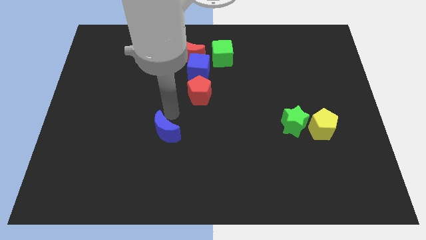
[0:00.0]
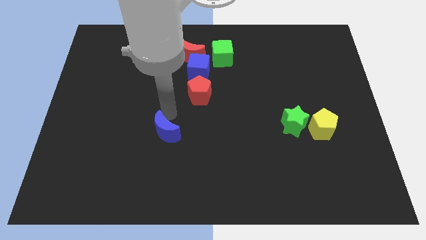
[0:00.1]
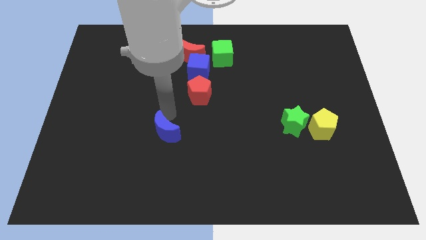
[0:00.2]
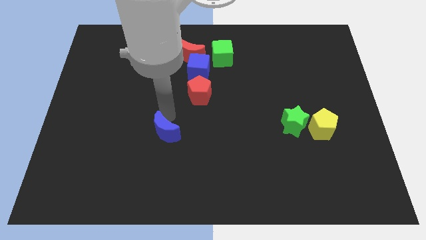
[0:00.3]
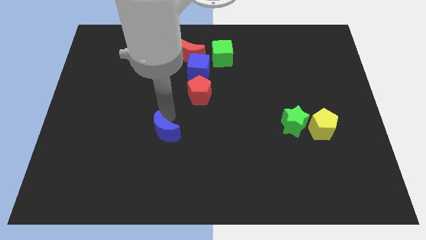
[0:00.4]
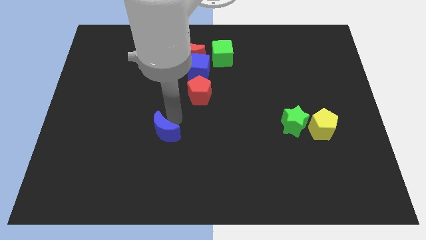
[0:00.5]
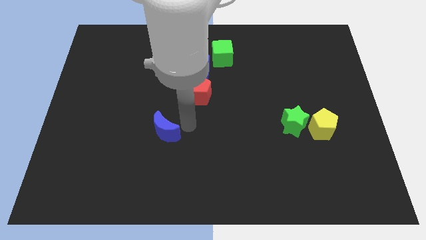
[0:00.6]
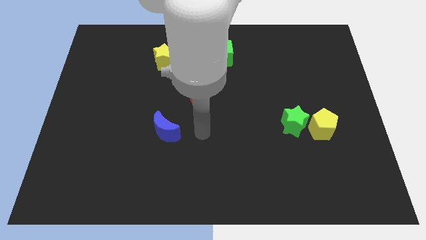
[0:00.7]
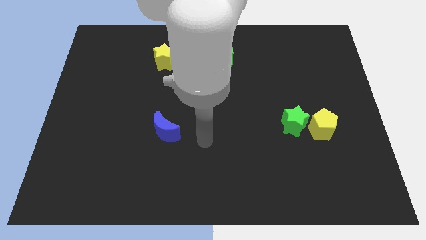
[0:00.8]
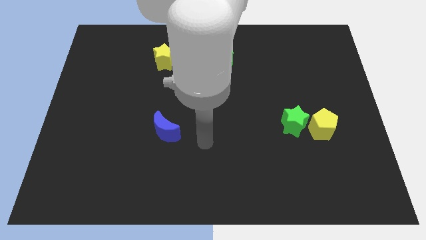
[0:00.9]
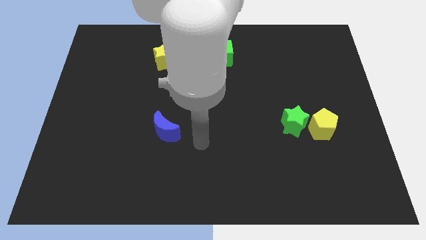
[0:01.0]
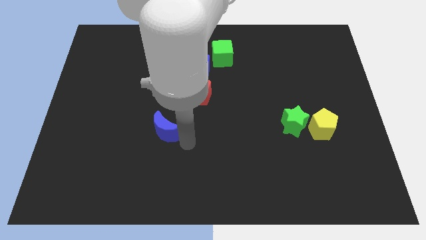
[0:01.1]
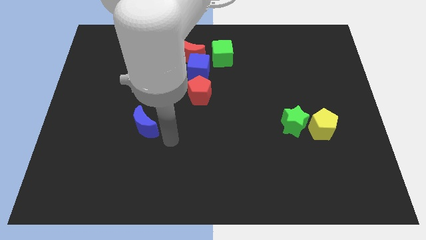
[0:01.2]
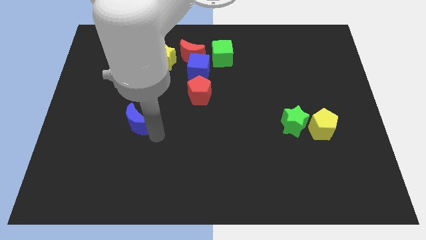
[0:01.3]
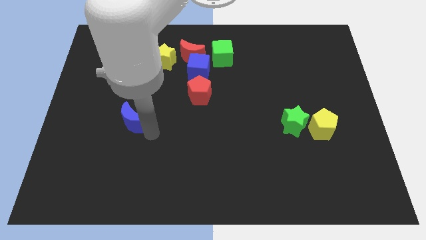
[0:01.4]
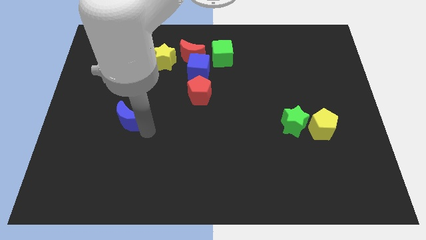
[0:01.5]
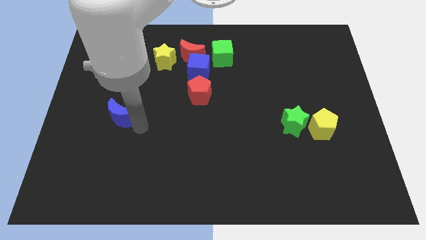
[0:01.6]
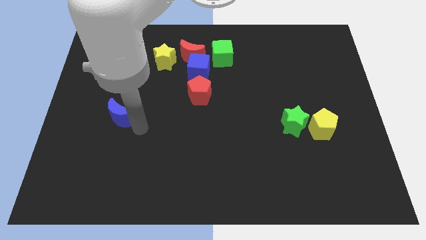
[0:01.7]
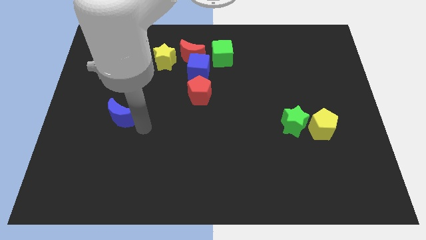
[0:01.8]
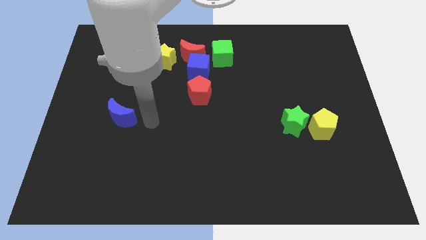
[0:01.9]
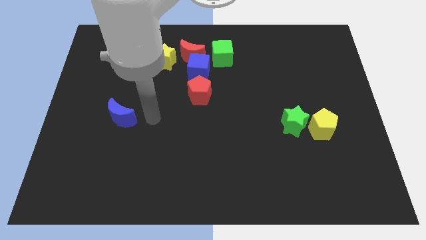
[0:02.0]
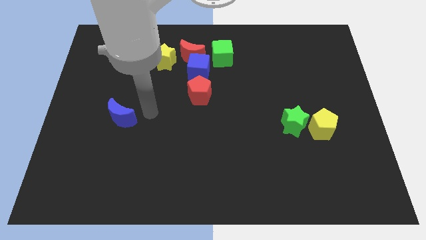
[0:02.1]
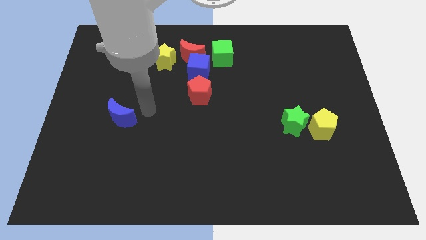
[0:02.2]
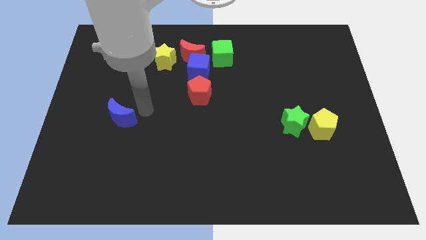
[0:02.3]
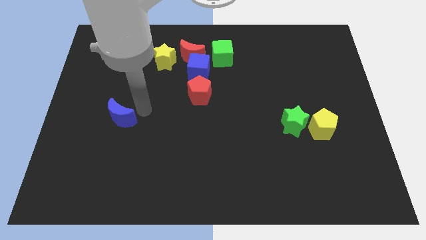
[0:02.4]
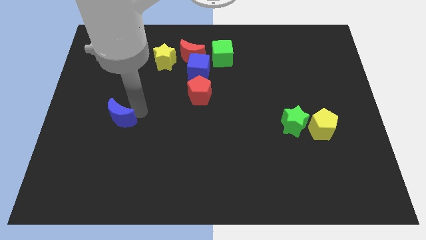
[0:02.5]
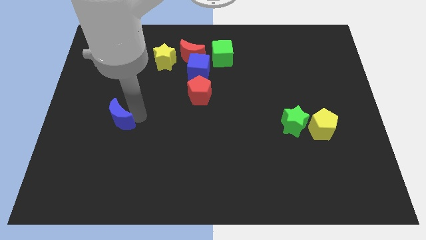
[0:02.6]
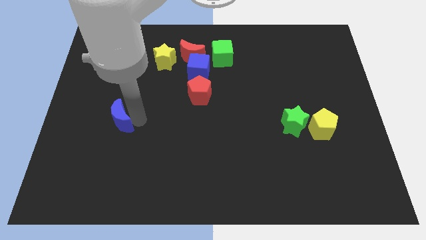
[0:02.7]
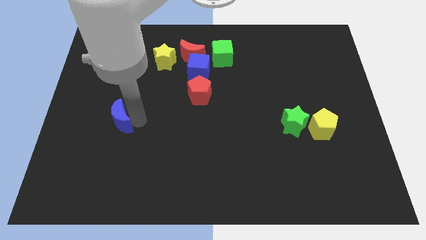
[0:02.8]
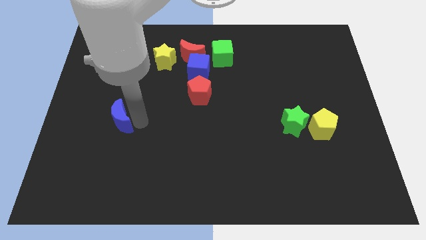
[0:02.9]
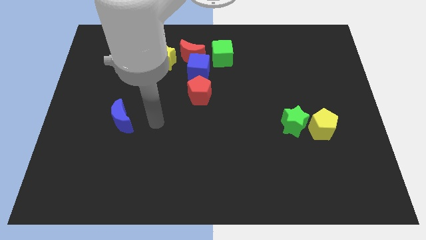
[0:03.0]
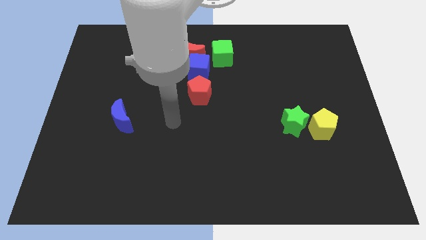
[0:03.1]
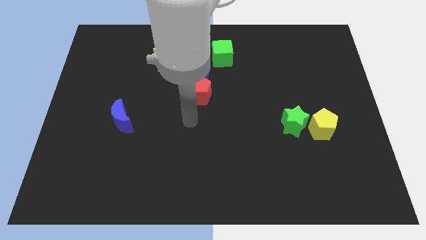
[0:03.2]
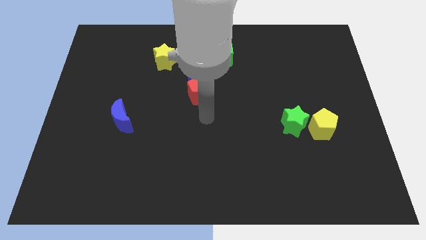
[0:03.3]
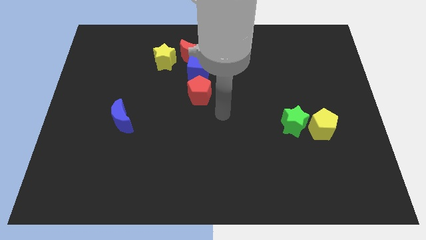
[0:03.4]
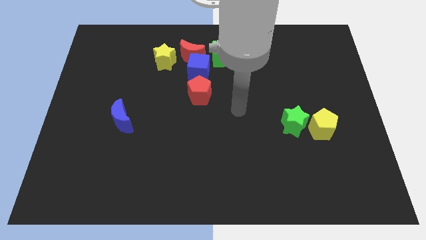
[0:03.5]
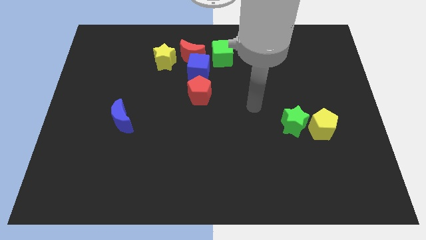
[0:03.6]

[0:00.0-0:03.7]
slide the blue crescent to the left side of the board

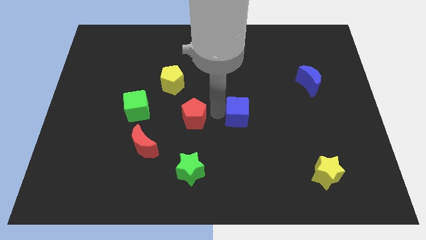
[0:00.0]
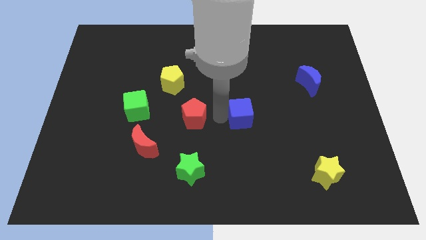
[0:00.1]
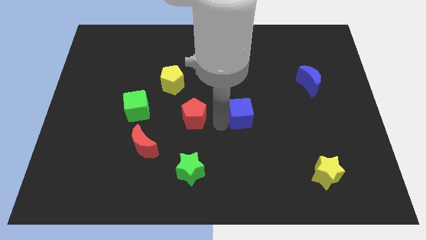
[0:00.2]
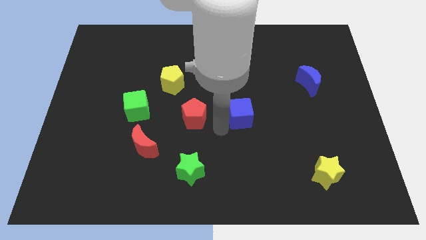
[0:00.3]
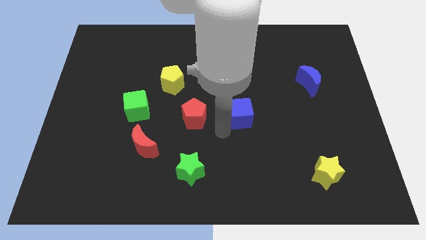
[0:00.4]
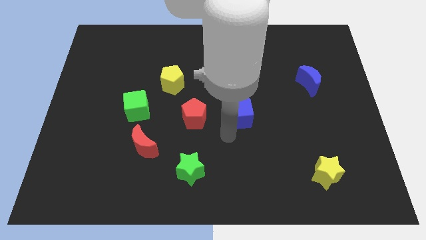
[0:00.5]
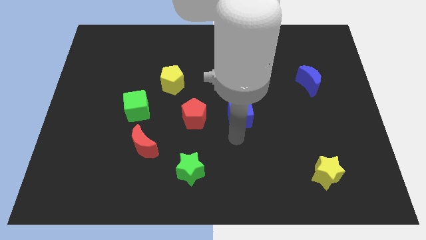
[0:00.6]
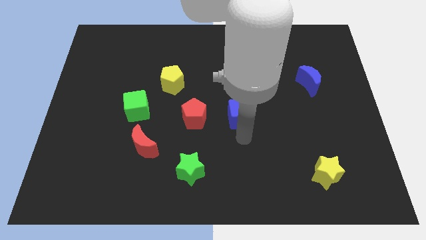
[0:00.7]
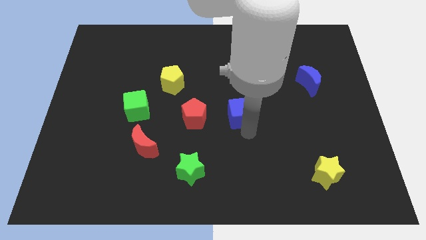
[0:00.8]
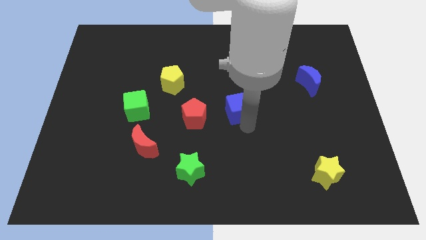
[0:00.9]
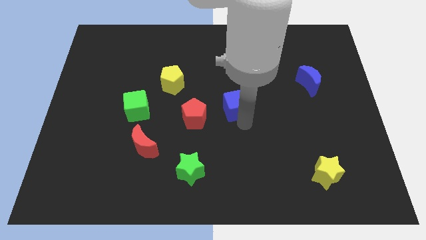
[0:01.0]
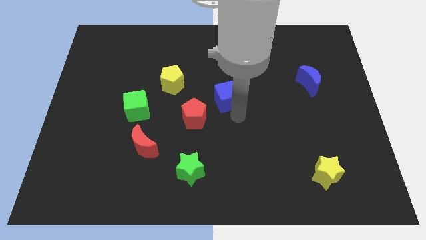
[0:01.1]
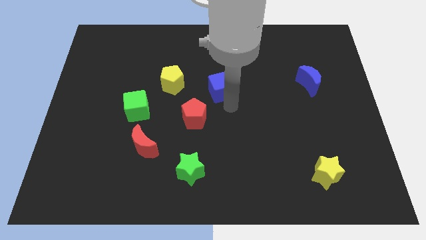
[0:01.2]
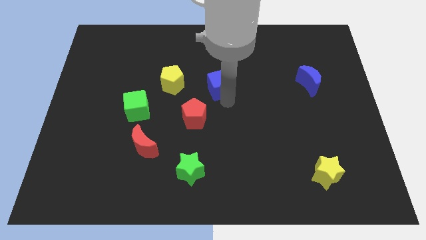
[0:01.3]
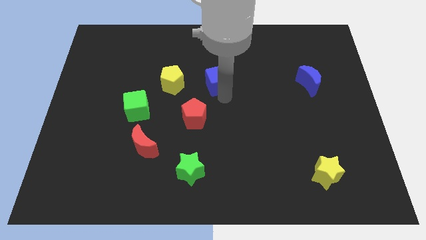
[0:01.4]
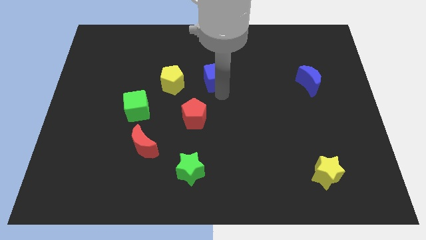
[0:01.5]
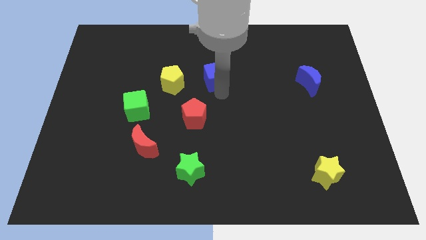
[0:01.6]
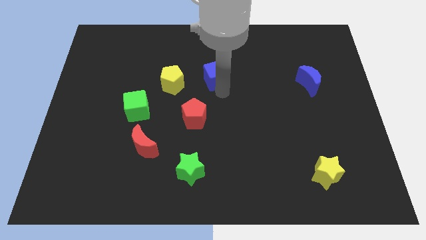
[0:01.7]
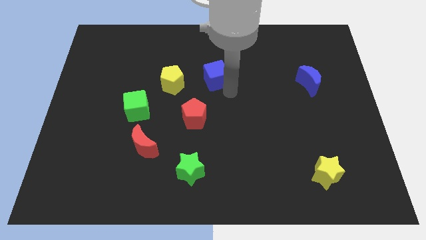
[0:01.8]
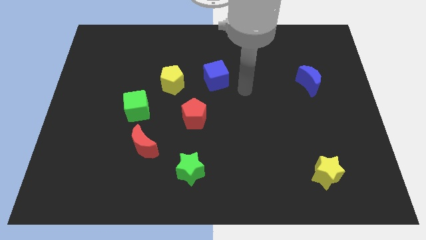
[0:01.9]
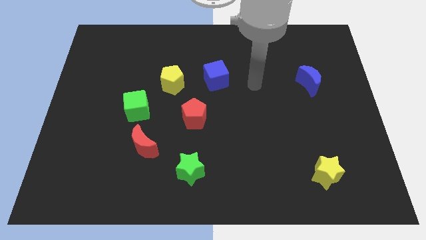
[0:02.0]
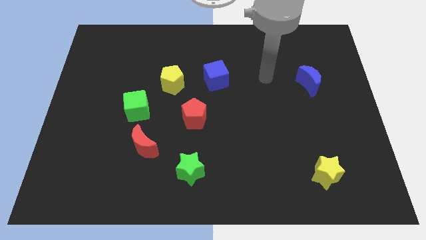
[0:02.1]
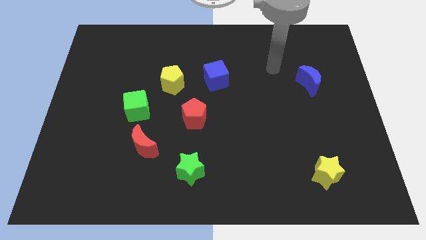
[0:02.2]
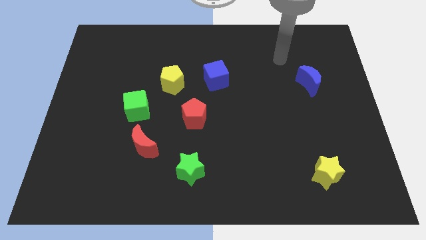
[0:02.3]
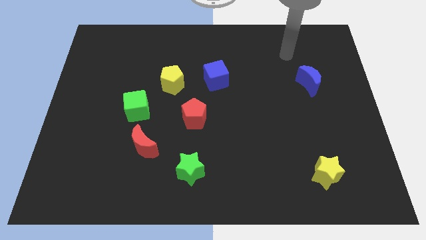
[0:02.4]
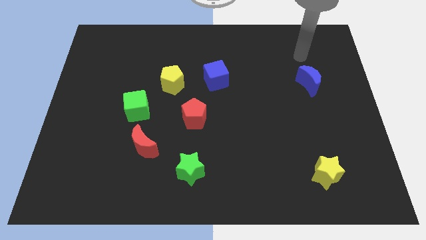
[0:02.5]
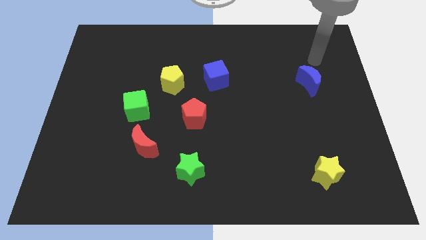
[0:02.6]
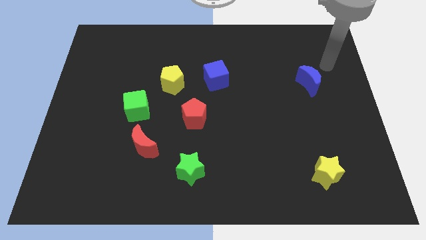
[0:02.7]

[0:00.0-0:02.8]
move the blue cube to the right of the yellow pentagon

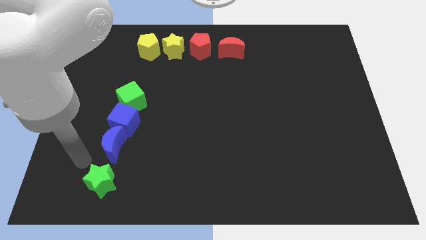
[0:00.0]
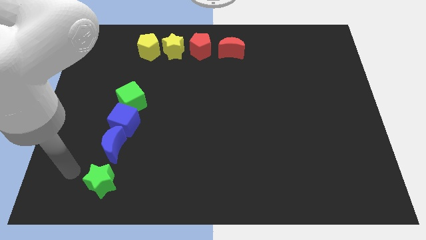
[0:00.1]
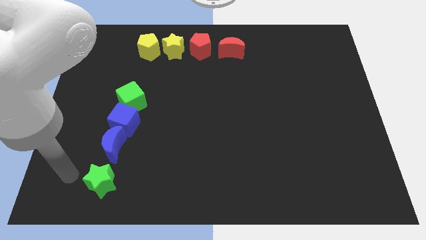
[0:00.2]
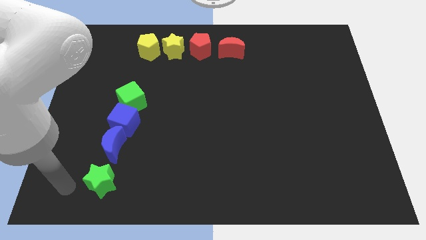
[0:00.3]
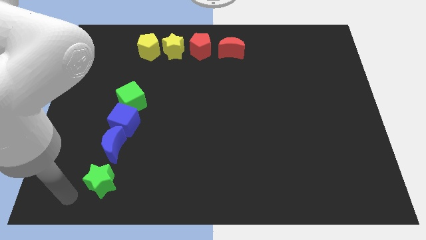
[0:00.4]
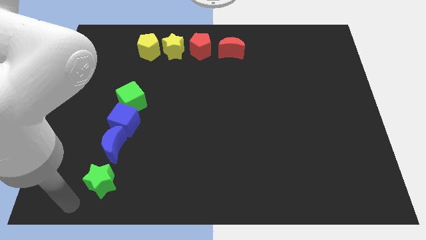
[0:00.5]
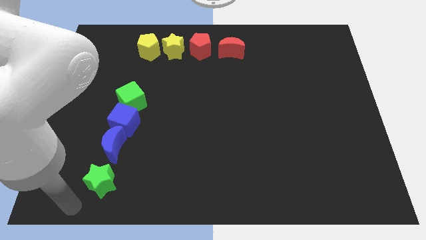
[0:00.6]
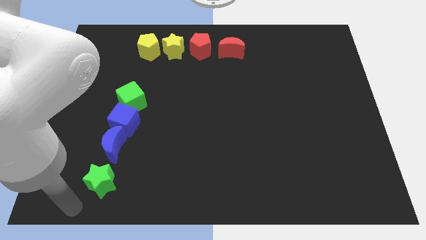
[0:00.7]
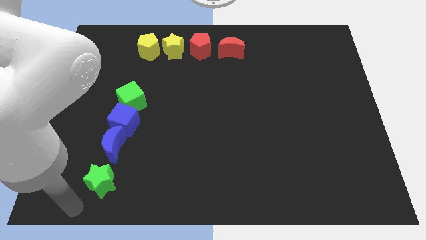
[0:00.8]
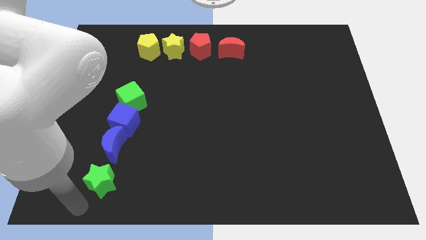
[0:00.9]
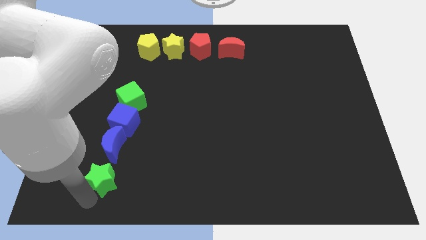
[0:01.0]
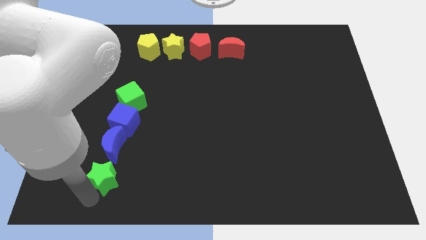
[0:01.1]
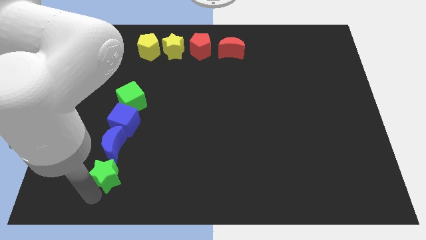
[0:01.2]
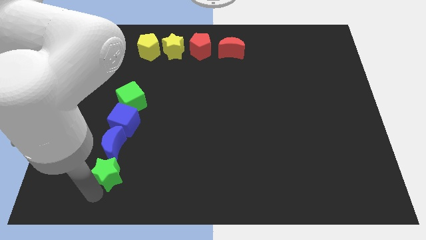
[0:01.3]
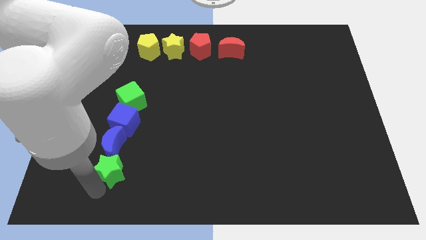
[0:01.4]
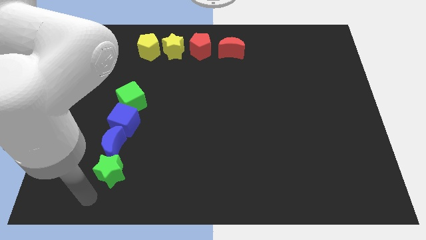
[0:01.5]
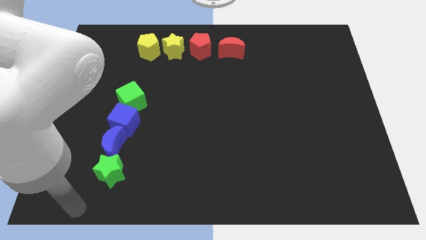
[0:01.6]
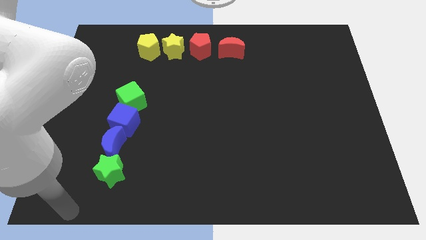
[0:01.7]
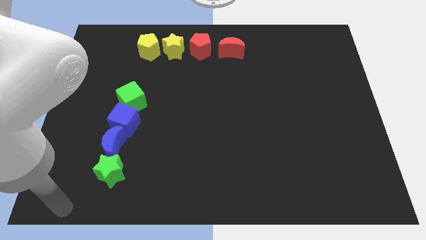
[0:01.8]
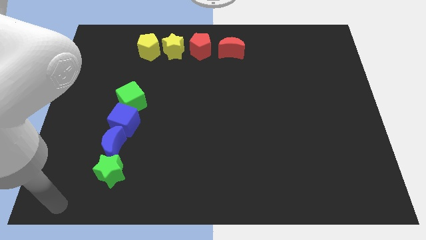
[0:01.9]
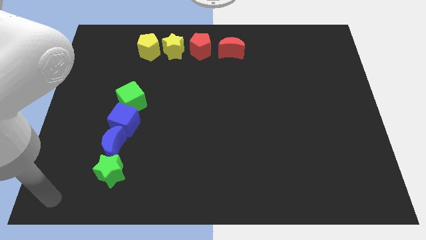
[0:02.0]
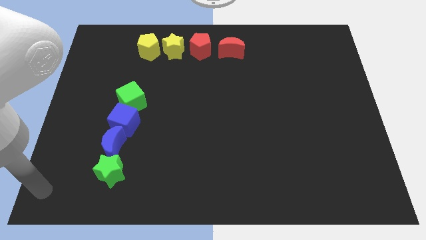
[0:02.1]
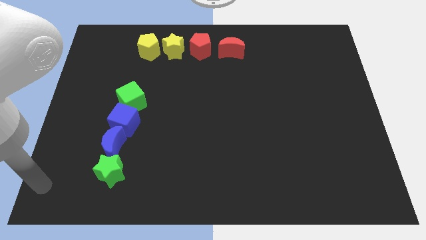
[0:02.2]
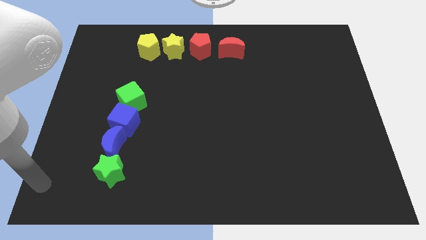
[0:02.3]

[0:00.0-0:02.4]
push the green star down to the blue moon
